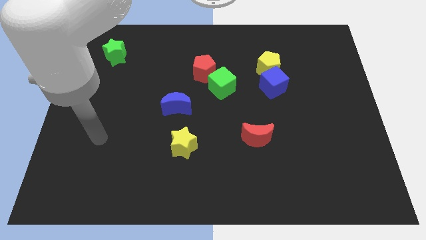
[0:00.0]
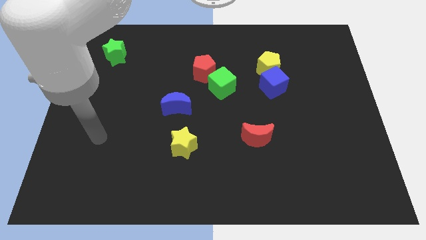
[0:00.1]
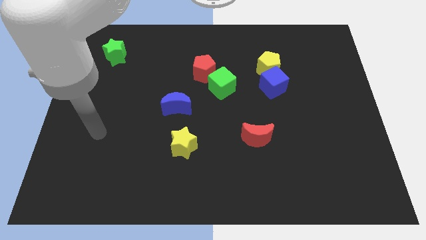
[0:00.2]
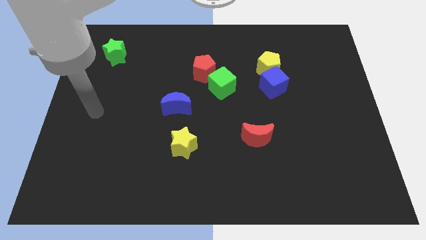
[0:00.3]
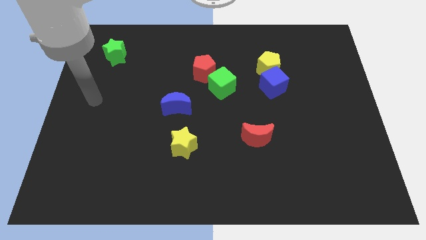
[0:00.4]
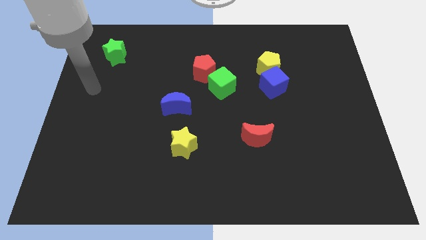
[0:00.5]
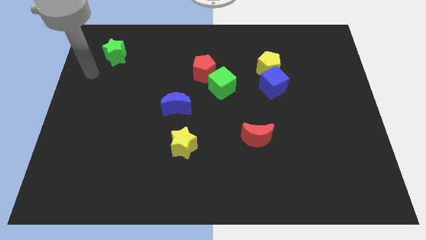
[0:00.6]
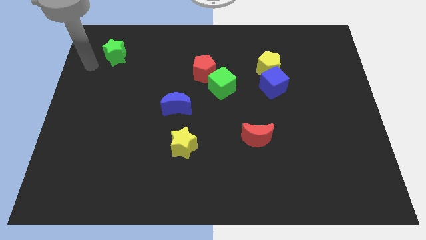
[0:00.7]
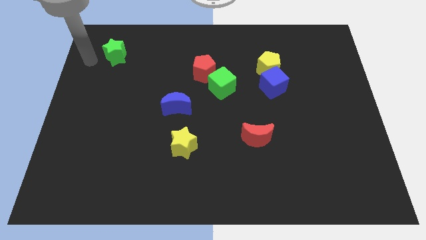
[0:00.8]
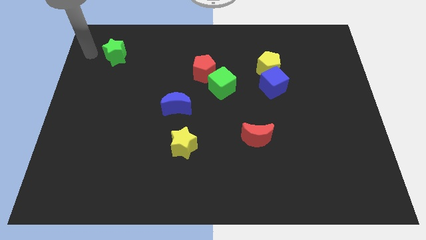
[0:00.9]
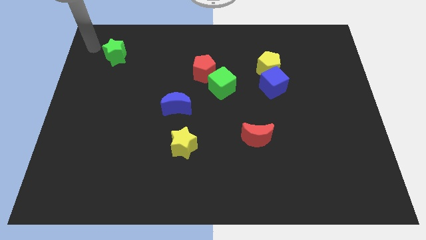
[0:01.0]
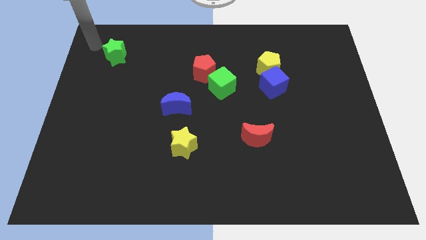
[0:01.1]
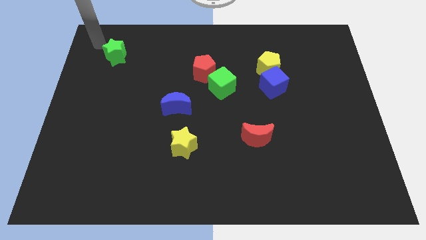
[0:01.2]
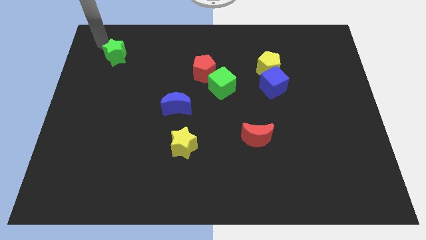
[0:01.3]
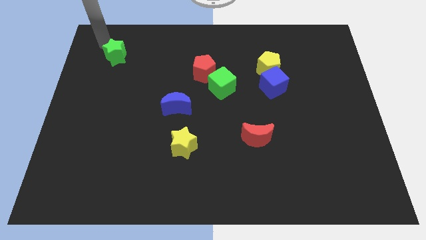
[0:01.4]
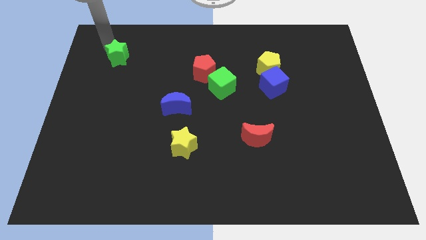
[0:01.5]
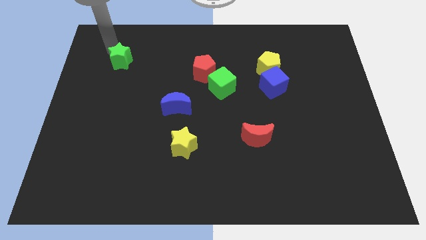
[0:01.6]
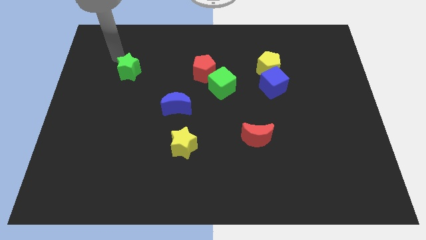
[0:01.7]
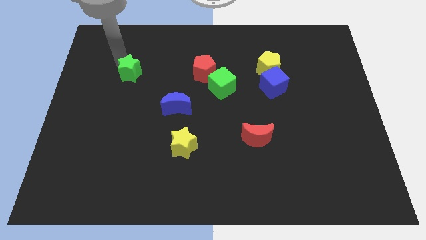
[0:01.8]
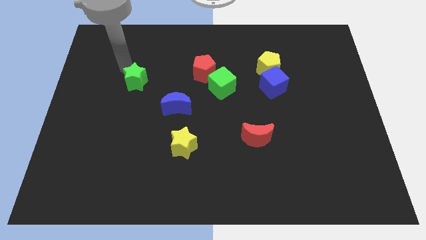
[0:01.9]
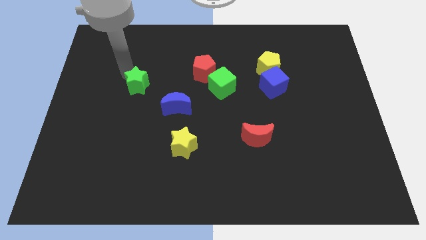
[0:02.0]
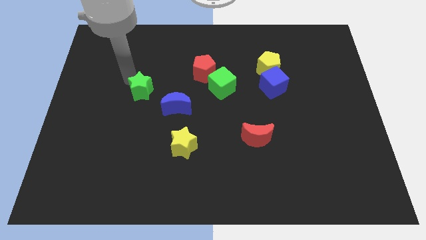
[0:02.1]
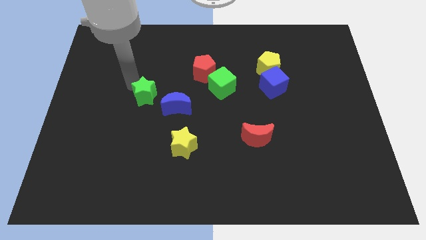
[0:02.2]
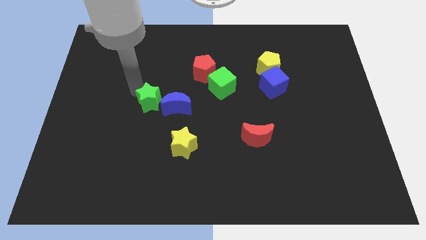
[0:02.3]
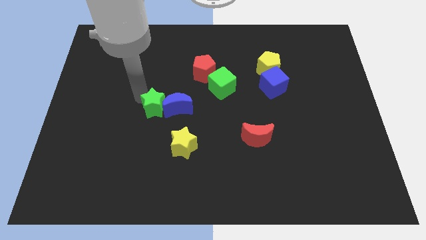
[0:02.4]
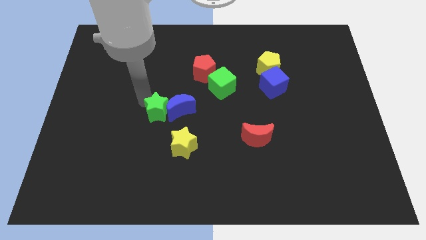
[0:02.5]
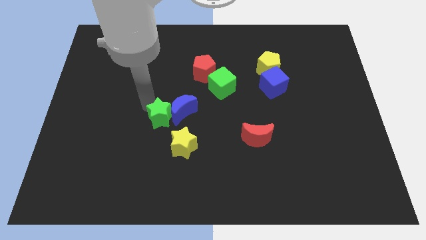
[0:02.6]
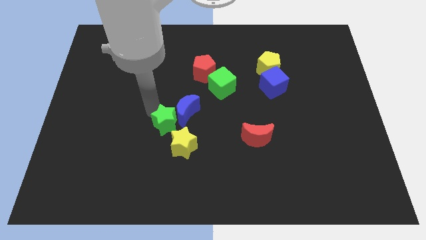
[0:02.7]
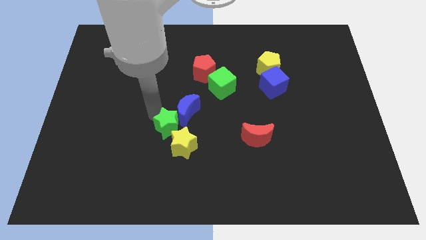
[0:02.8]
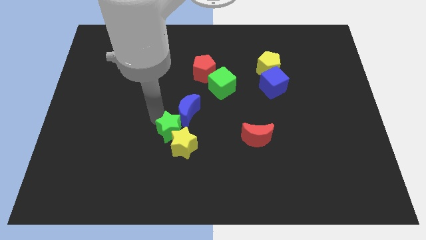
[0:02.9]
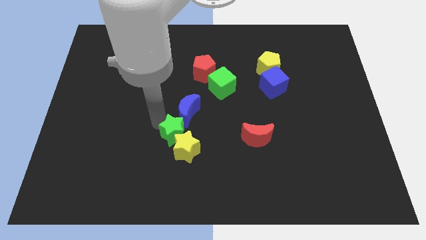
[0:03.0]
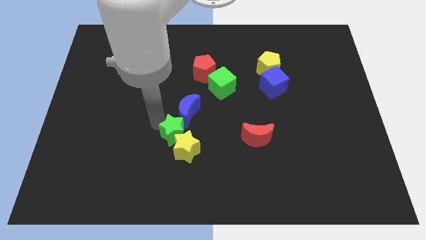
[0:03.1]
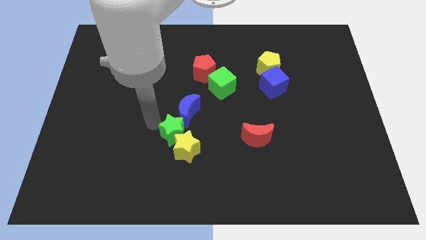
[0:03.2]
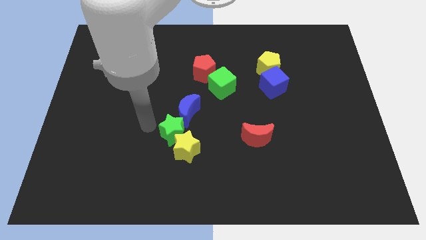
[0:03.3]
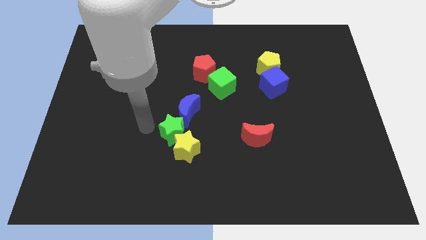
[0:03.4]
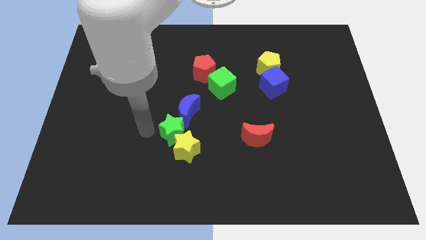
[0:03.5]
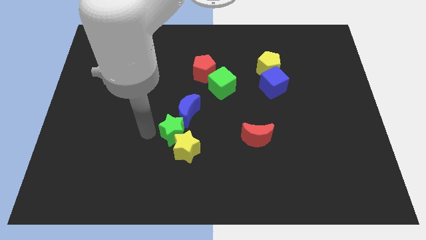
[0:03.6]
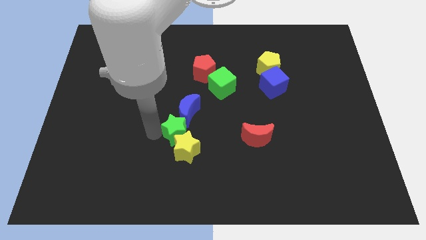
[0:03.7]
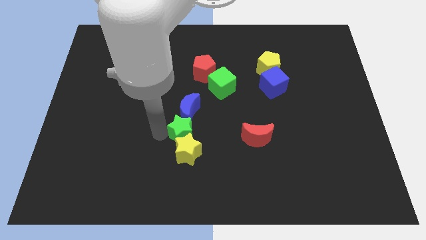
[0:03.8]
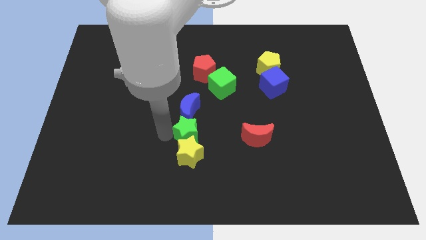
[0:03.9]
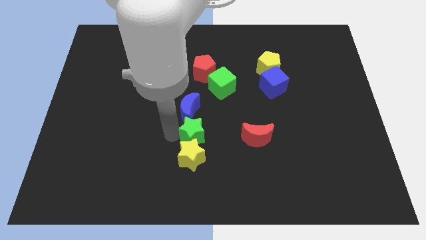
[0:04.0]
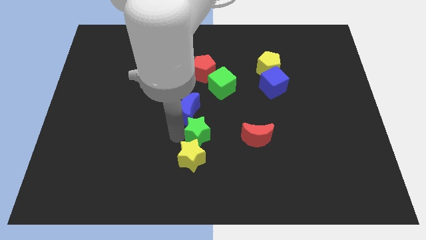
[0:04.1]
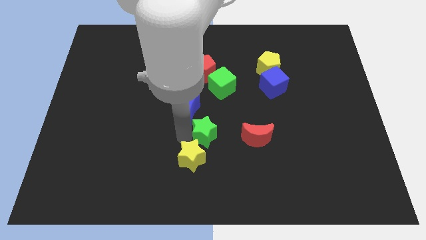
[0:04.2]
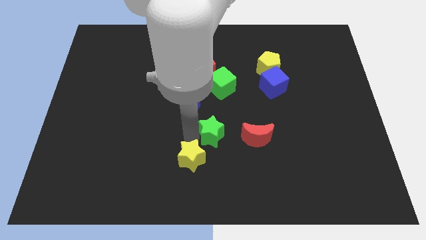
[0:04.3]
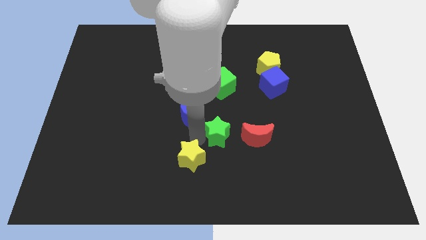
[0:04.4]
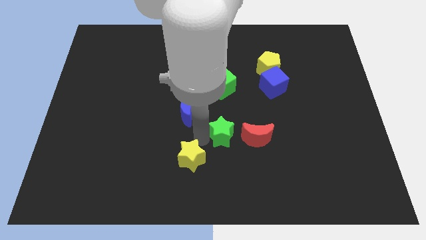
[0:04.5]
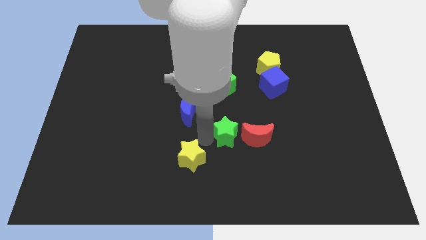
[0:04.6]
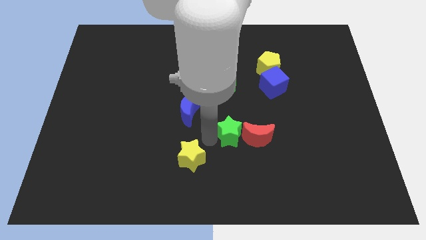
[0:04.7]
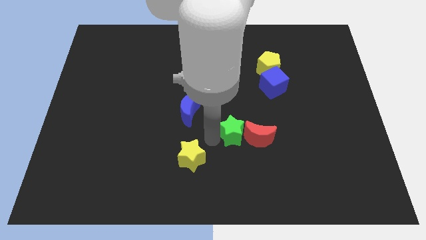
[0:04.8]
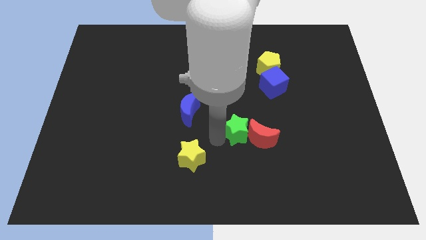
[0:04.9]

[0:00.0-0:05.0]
put the green star next to the red moon

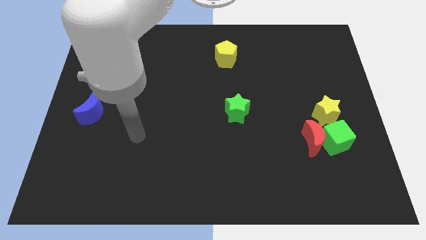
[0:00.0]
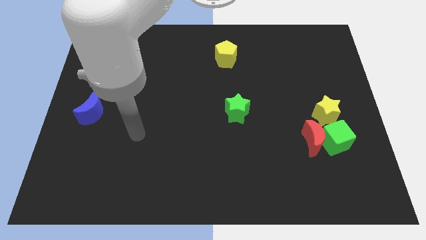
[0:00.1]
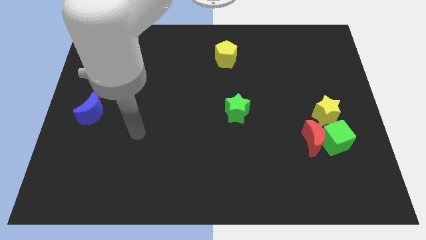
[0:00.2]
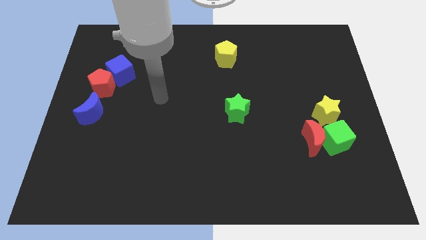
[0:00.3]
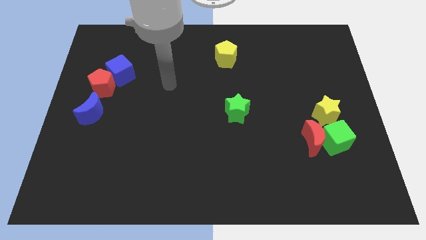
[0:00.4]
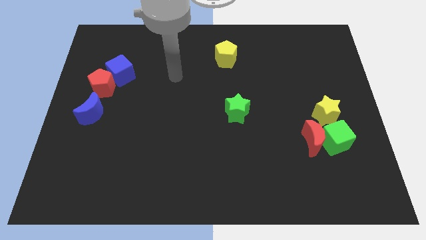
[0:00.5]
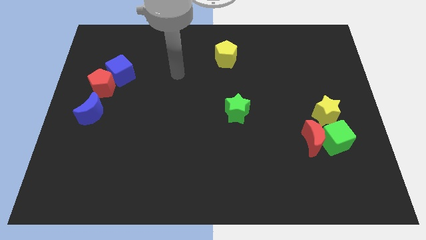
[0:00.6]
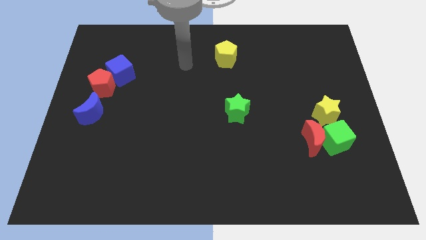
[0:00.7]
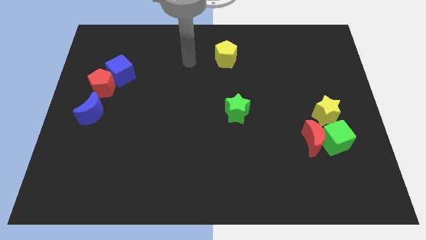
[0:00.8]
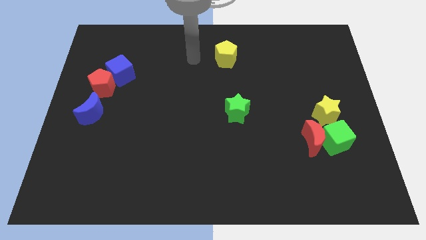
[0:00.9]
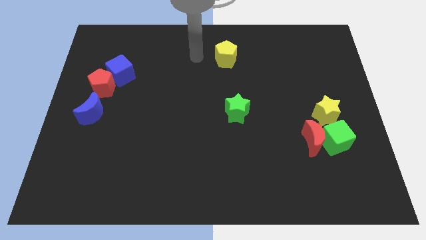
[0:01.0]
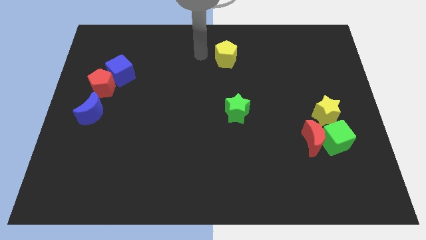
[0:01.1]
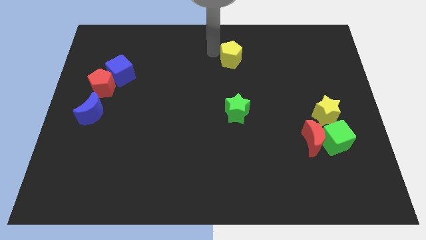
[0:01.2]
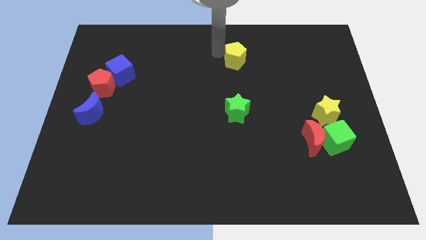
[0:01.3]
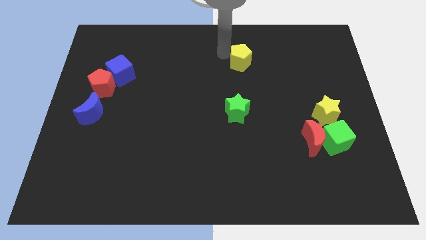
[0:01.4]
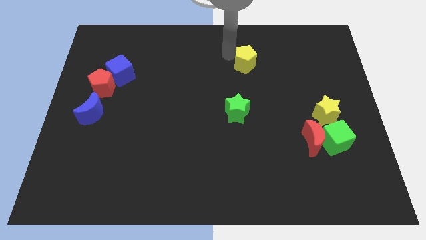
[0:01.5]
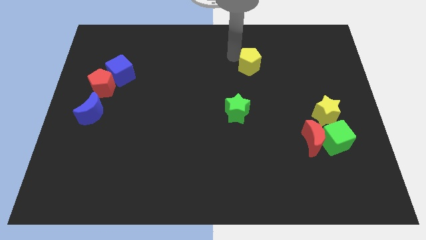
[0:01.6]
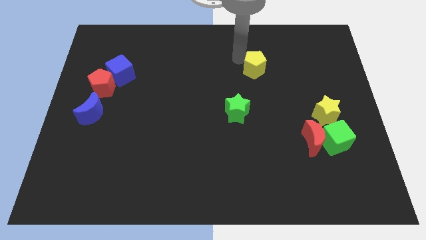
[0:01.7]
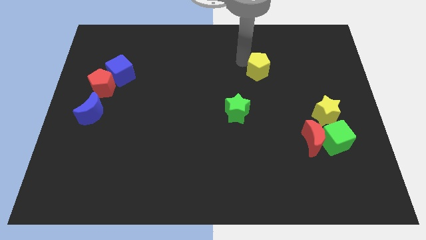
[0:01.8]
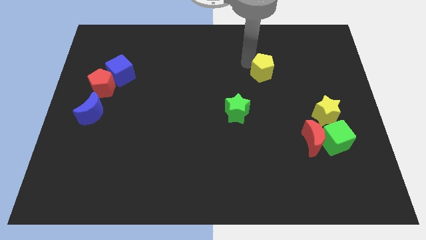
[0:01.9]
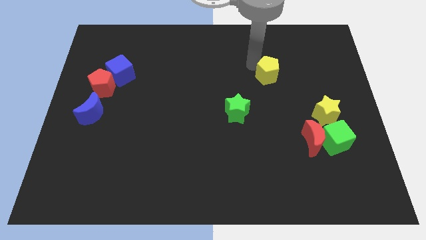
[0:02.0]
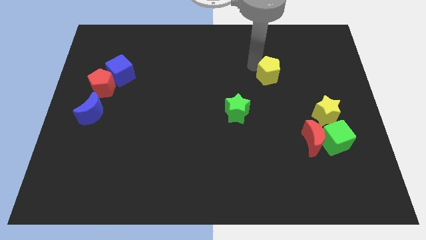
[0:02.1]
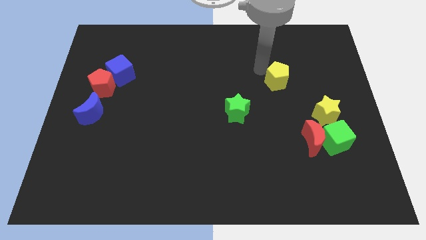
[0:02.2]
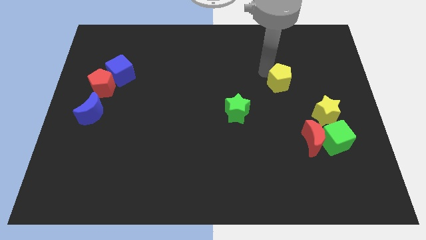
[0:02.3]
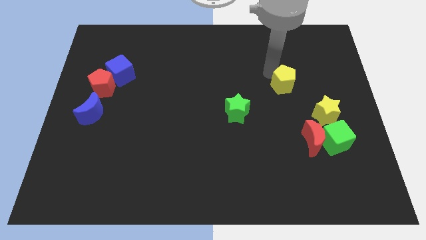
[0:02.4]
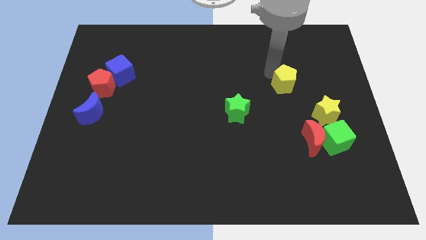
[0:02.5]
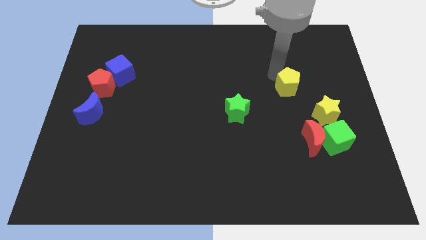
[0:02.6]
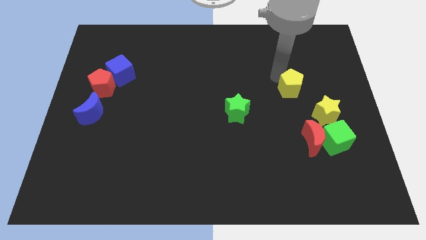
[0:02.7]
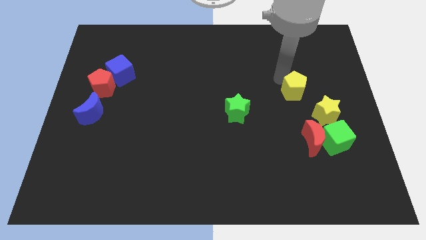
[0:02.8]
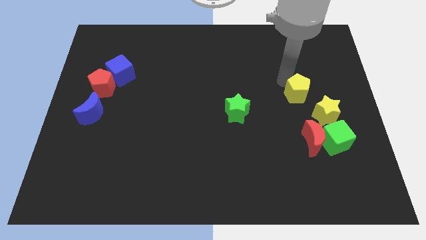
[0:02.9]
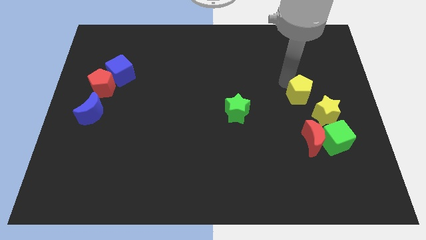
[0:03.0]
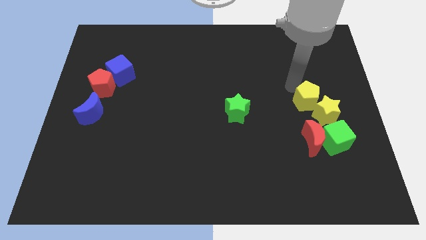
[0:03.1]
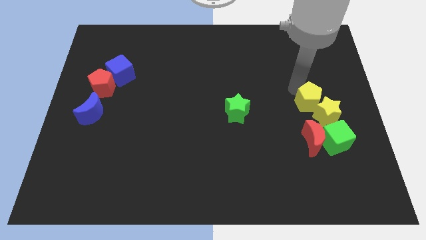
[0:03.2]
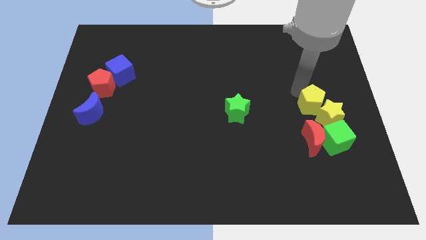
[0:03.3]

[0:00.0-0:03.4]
put the yellow pentagon towards the yellow star
